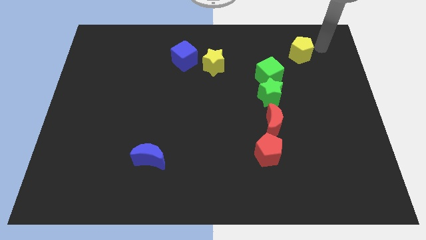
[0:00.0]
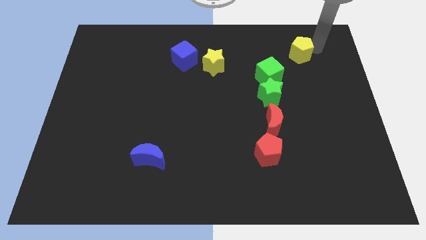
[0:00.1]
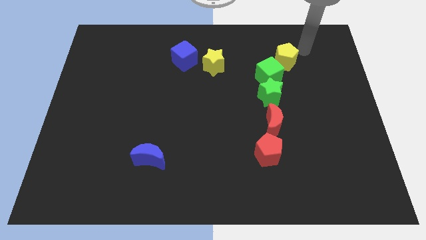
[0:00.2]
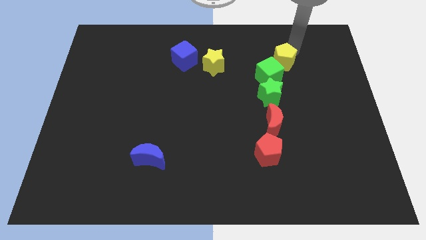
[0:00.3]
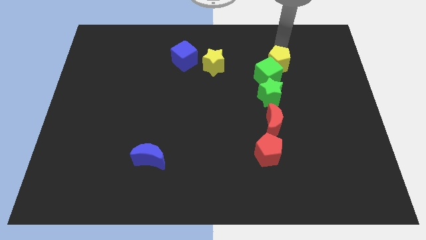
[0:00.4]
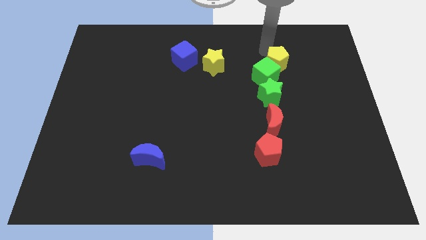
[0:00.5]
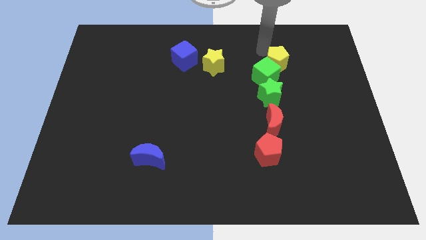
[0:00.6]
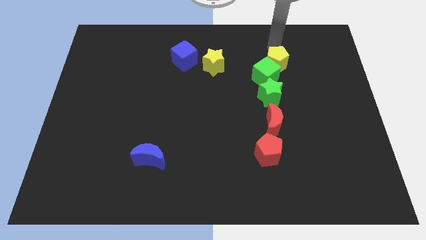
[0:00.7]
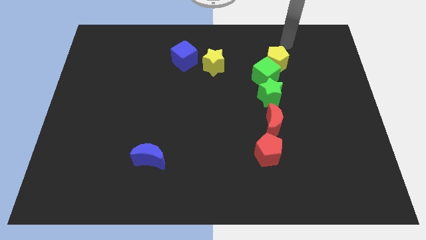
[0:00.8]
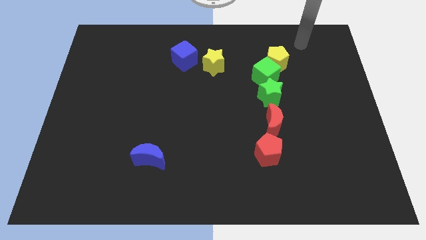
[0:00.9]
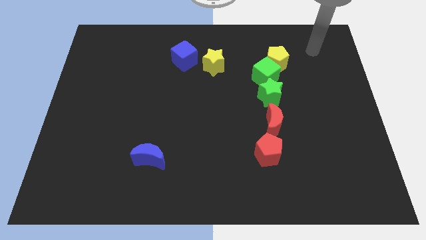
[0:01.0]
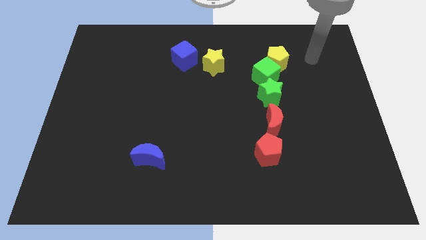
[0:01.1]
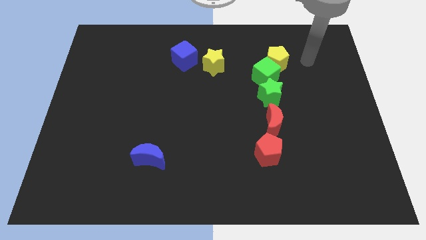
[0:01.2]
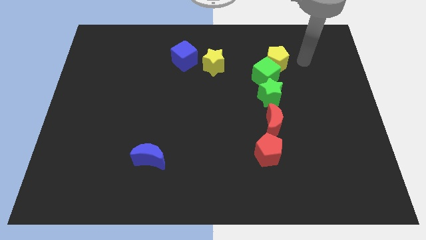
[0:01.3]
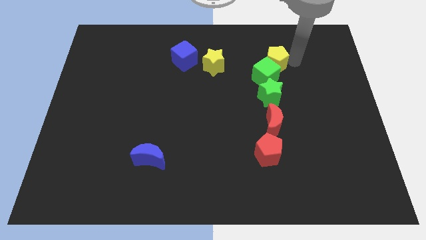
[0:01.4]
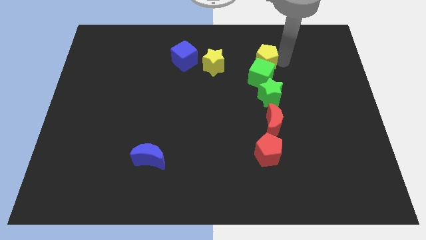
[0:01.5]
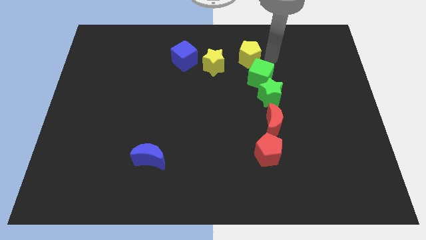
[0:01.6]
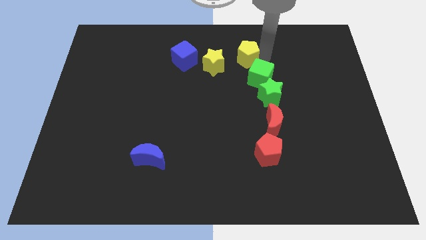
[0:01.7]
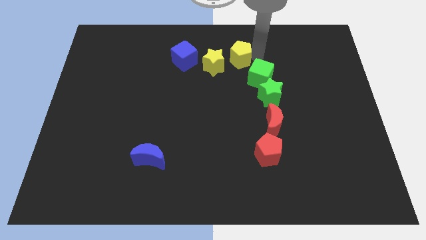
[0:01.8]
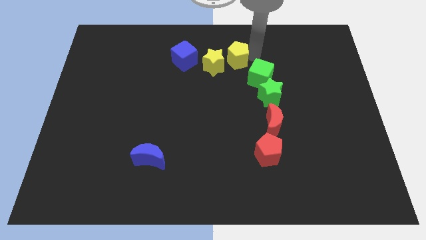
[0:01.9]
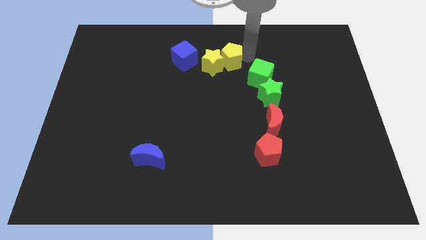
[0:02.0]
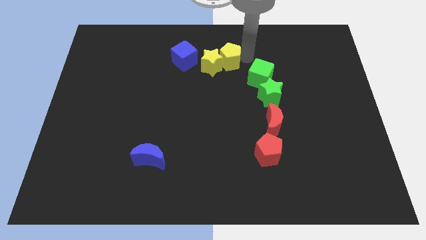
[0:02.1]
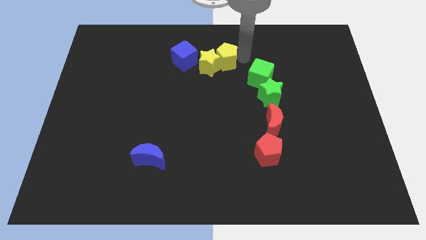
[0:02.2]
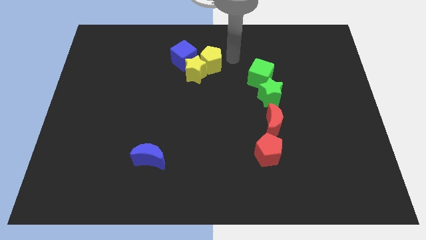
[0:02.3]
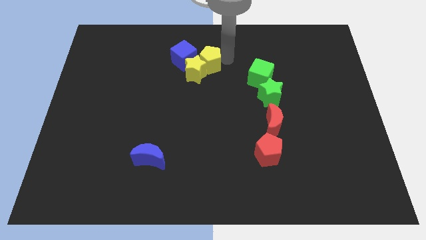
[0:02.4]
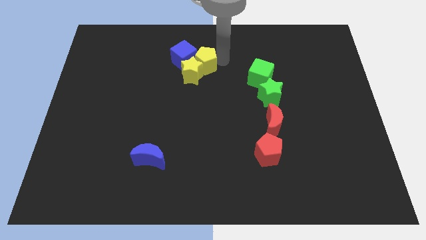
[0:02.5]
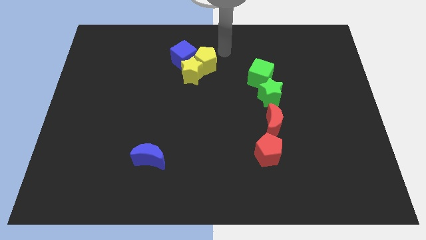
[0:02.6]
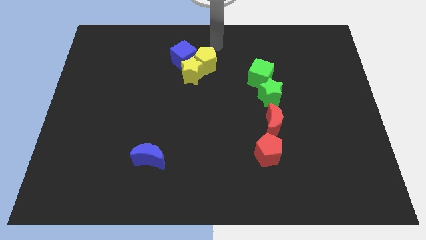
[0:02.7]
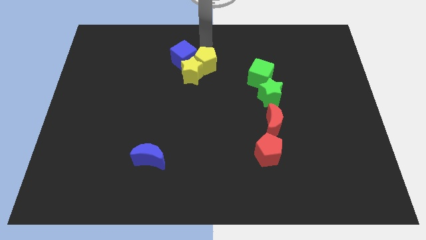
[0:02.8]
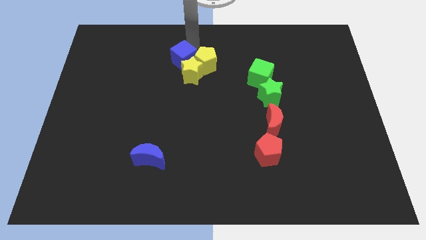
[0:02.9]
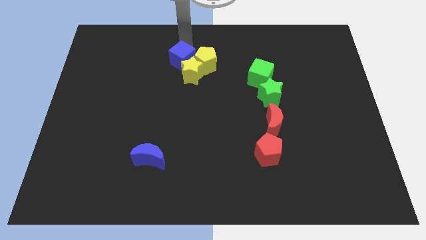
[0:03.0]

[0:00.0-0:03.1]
slide yellow pentagon into yellow star

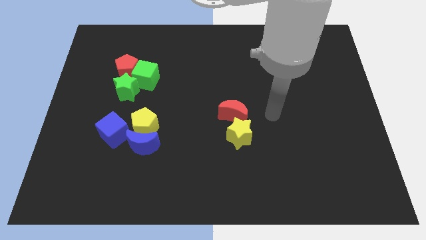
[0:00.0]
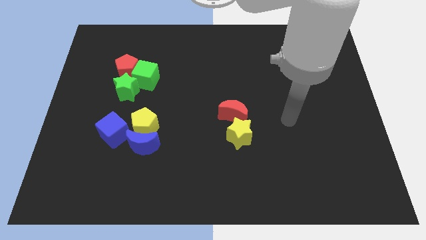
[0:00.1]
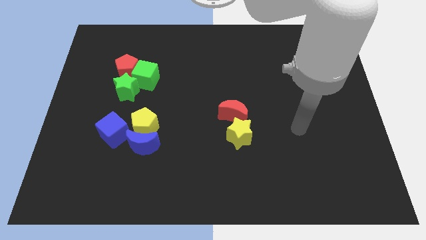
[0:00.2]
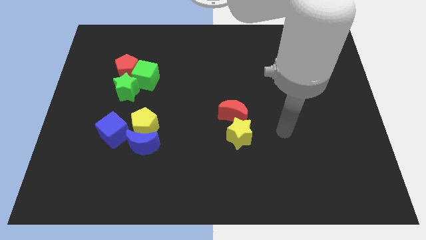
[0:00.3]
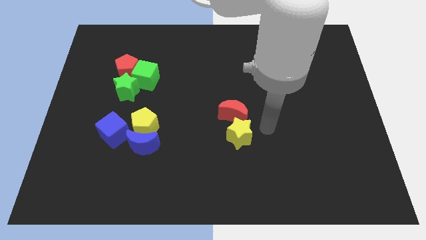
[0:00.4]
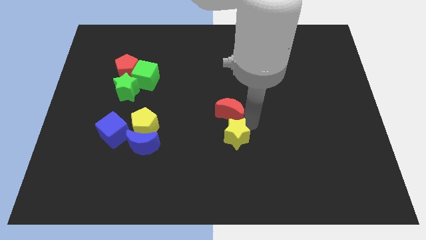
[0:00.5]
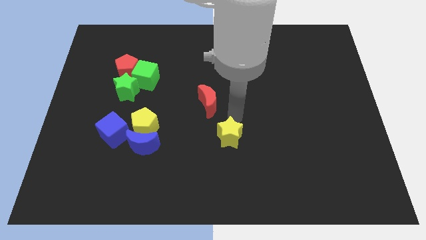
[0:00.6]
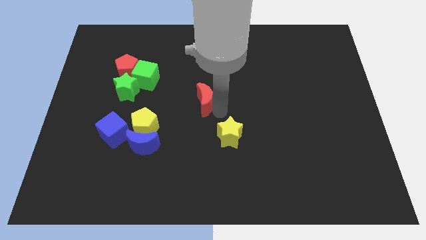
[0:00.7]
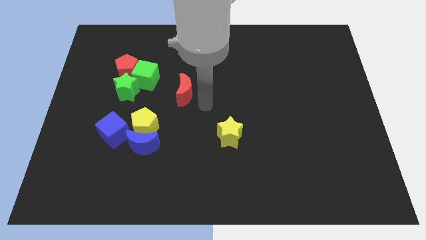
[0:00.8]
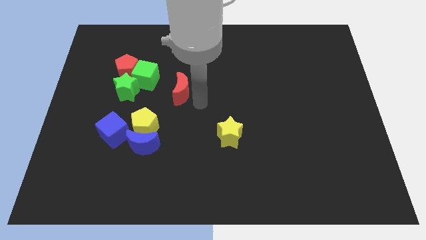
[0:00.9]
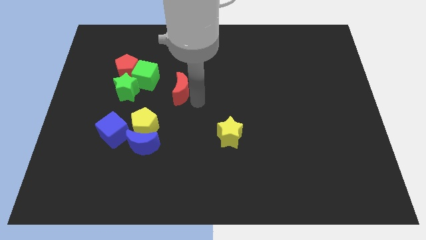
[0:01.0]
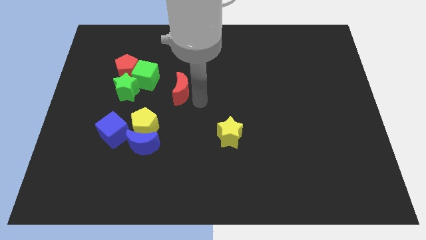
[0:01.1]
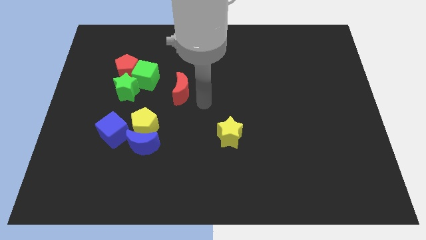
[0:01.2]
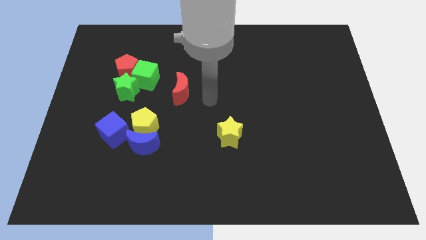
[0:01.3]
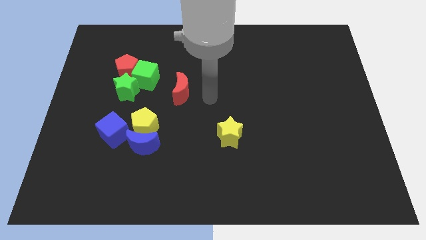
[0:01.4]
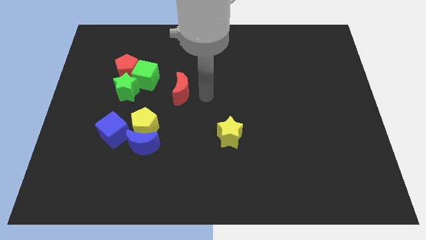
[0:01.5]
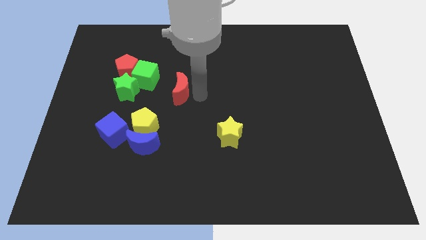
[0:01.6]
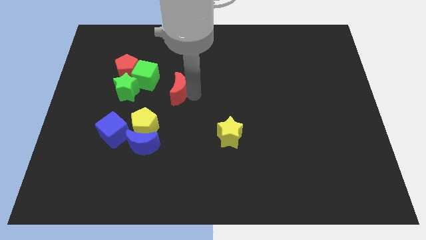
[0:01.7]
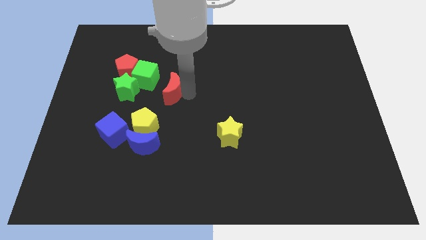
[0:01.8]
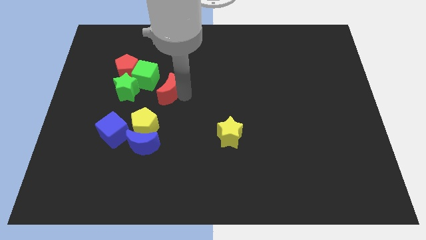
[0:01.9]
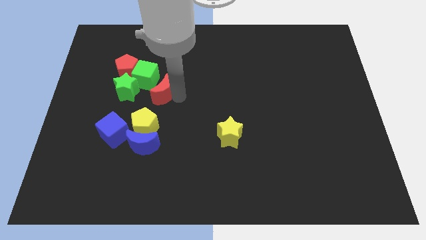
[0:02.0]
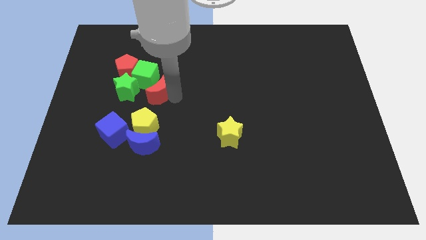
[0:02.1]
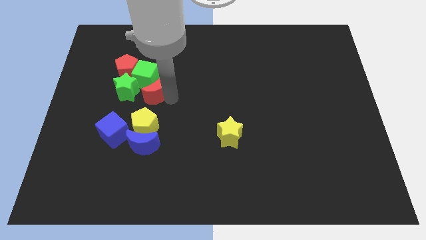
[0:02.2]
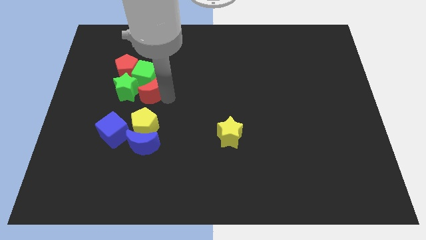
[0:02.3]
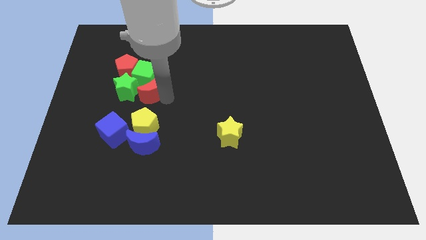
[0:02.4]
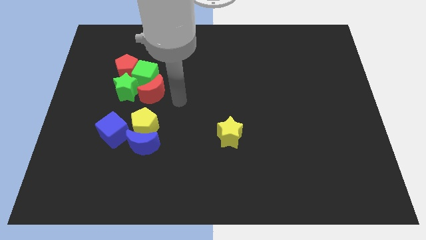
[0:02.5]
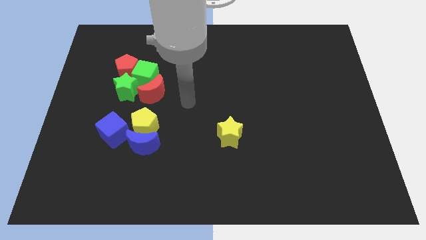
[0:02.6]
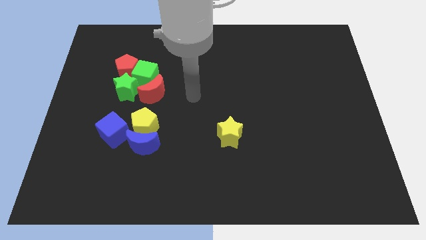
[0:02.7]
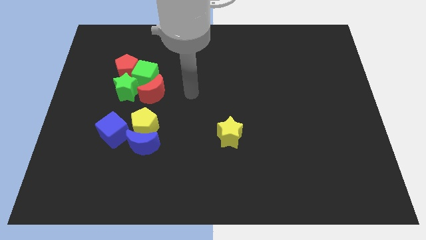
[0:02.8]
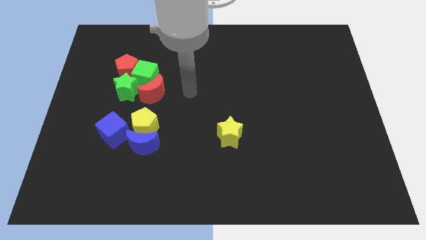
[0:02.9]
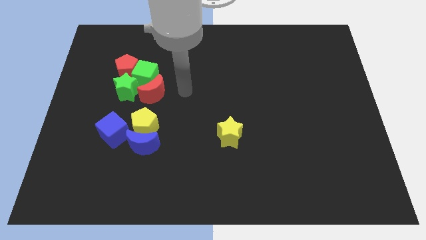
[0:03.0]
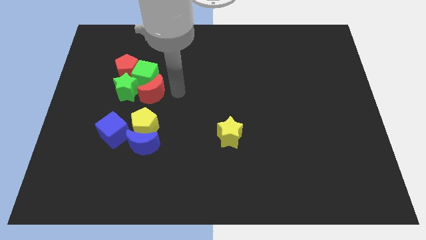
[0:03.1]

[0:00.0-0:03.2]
place the red moon into the group of blocks

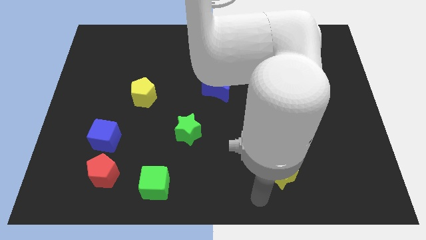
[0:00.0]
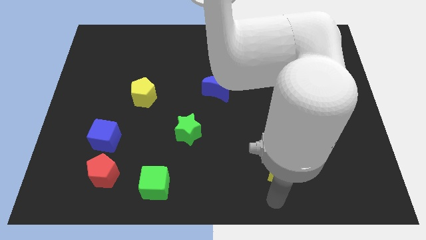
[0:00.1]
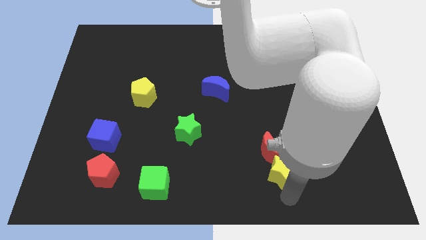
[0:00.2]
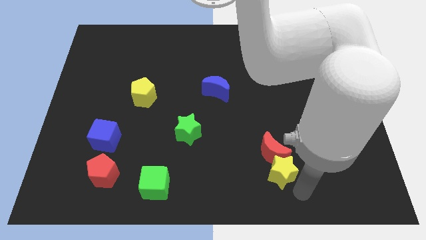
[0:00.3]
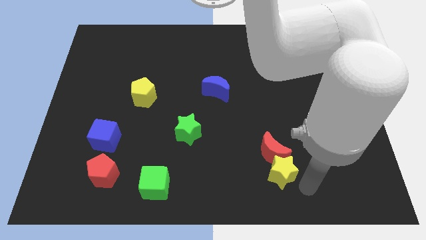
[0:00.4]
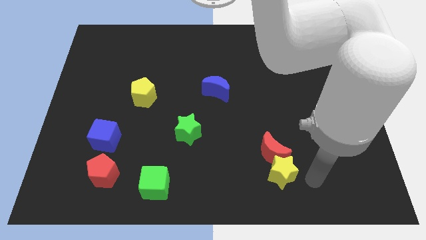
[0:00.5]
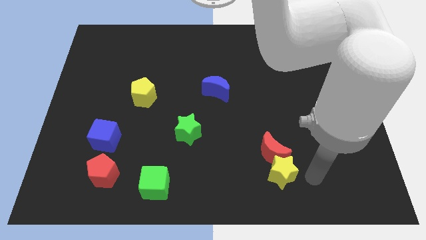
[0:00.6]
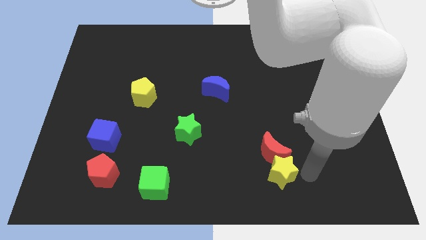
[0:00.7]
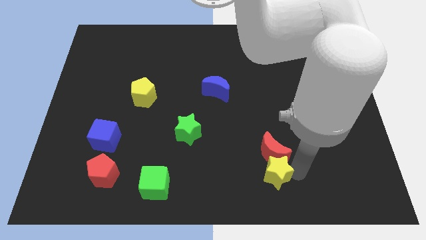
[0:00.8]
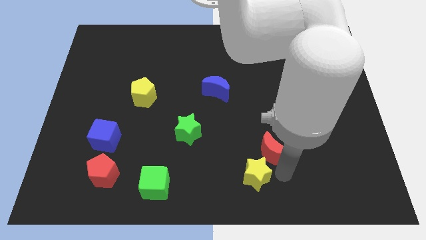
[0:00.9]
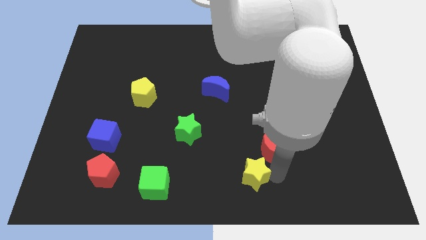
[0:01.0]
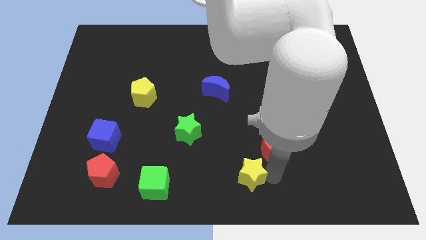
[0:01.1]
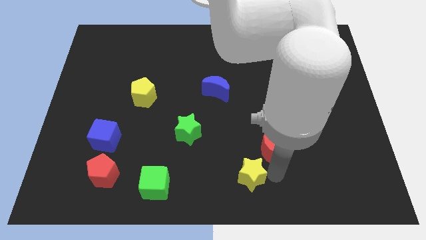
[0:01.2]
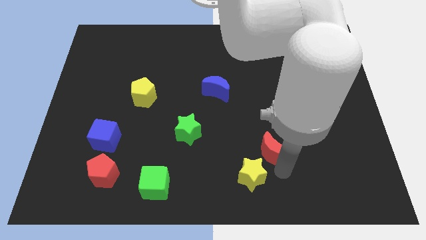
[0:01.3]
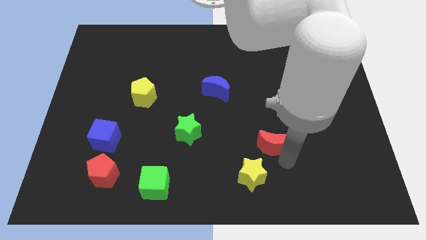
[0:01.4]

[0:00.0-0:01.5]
move the yellow star diagonally on the bottom left side of the red moon

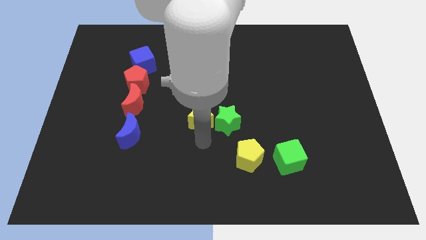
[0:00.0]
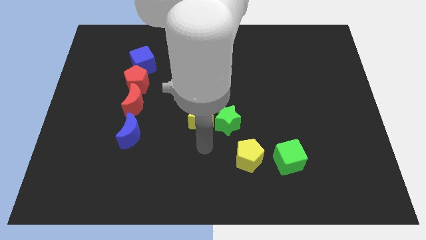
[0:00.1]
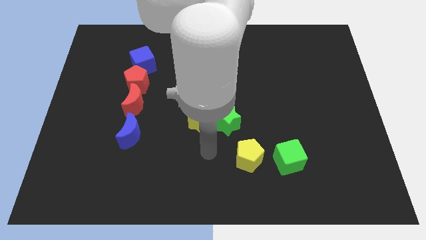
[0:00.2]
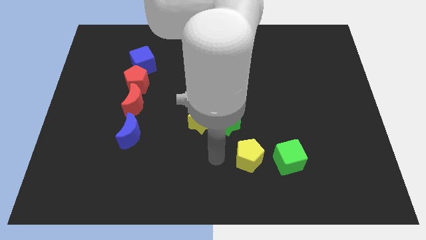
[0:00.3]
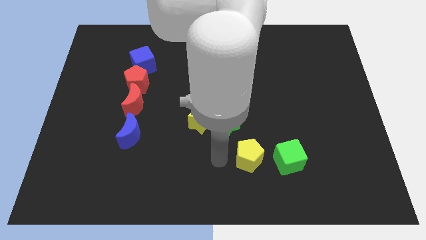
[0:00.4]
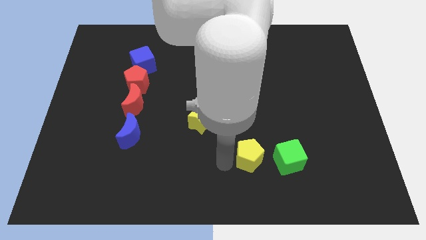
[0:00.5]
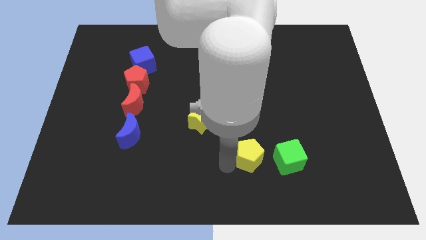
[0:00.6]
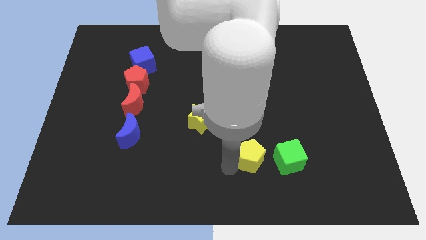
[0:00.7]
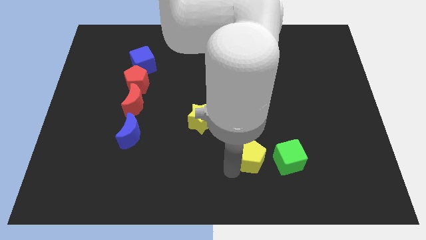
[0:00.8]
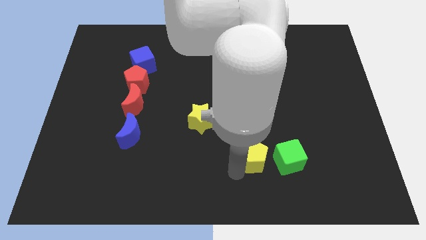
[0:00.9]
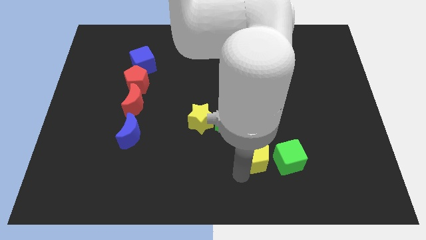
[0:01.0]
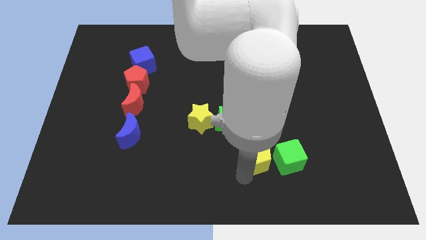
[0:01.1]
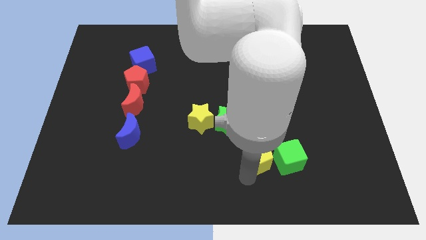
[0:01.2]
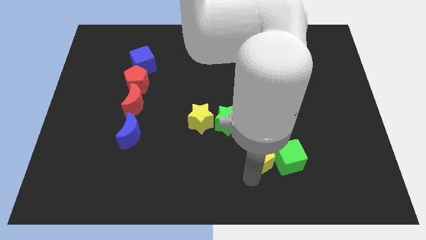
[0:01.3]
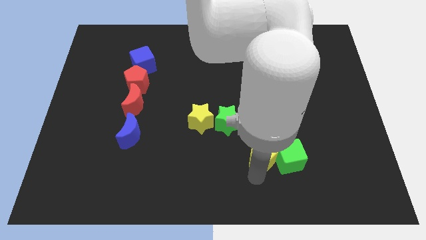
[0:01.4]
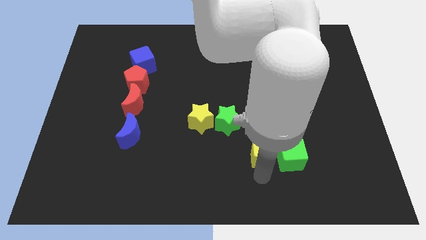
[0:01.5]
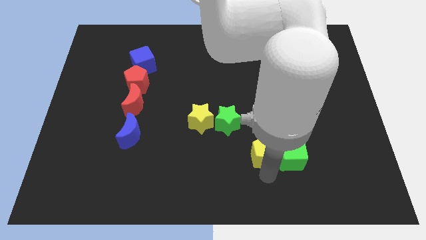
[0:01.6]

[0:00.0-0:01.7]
move the yellow pentagon into the left side of the green cube
